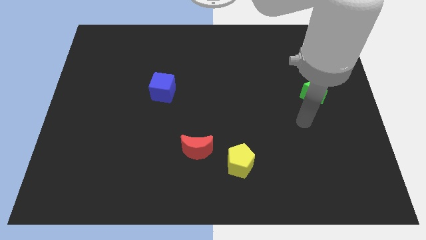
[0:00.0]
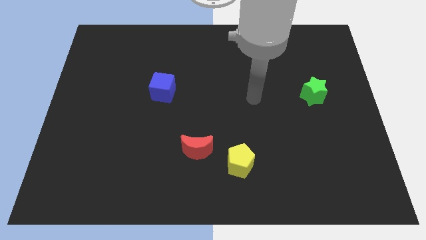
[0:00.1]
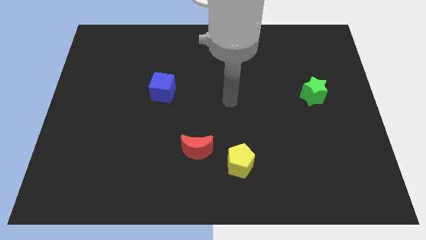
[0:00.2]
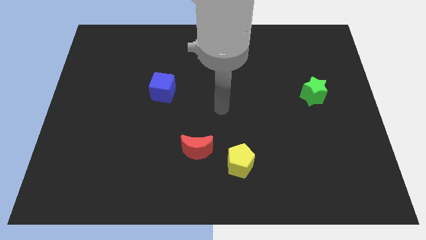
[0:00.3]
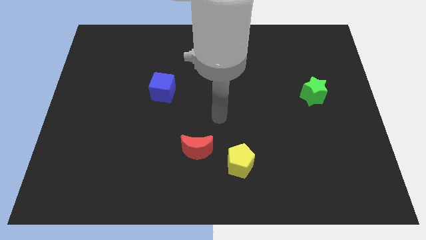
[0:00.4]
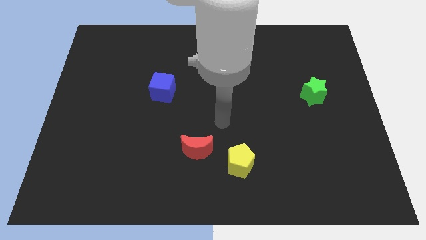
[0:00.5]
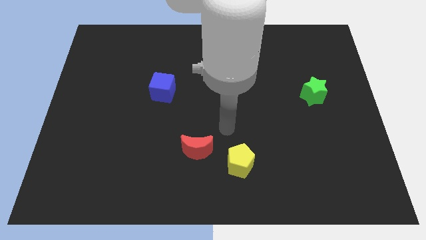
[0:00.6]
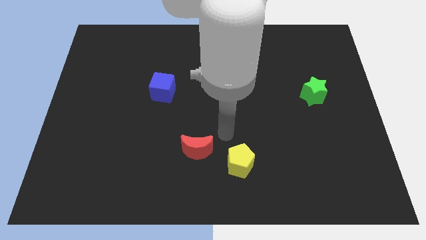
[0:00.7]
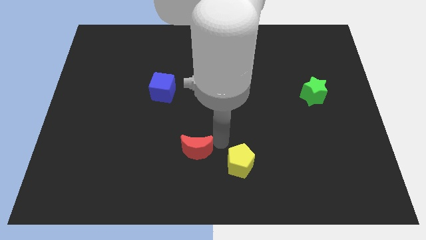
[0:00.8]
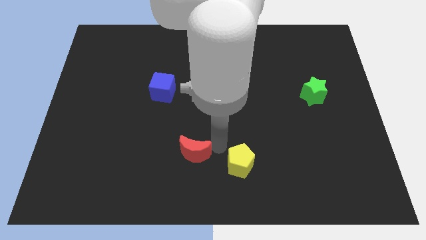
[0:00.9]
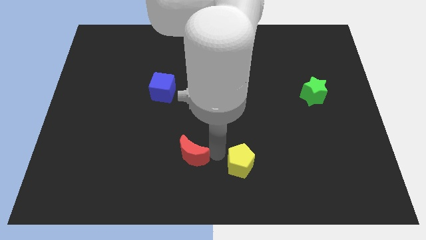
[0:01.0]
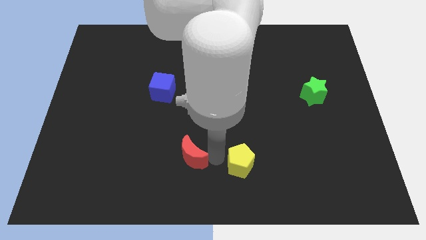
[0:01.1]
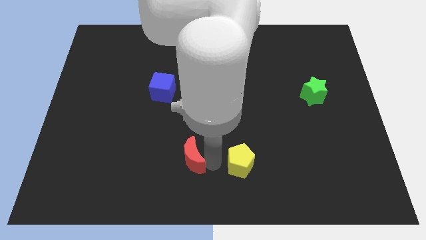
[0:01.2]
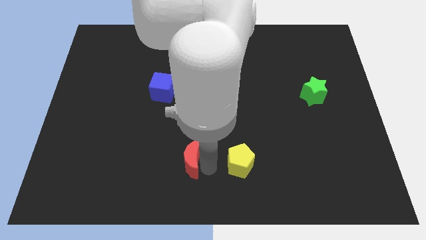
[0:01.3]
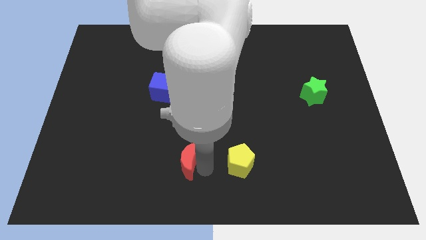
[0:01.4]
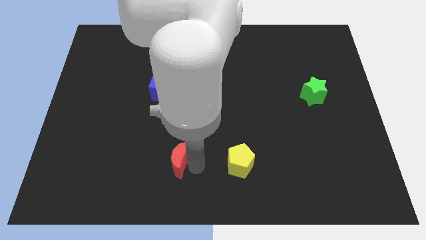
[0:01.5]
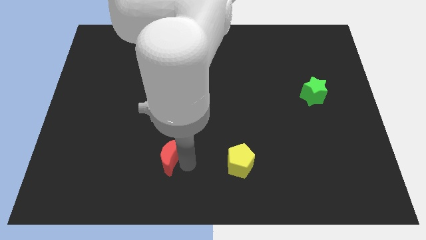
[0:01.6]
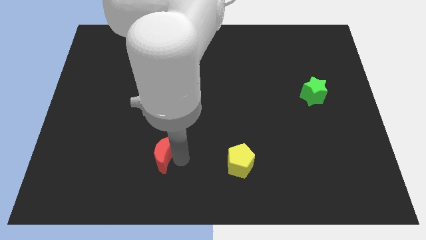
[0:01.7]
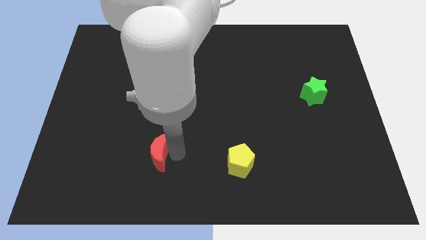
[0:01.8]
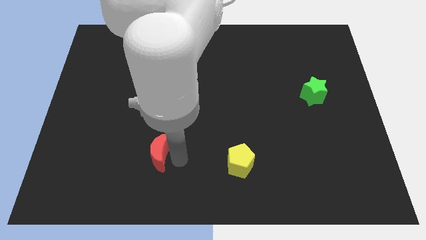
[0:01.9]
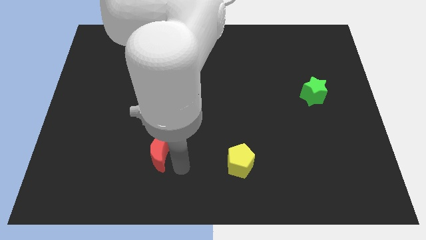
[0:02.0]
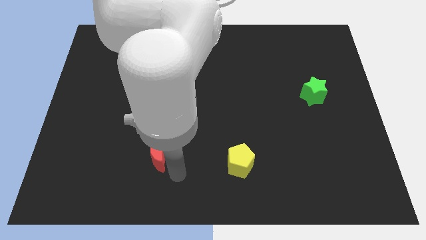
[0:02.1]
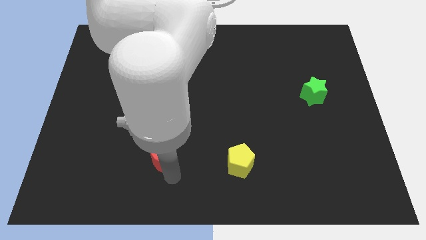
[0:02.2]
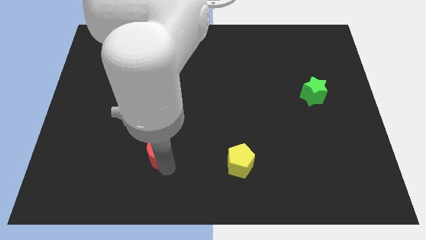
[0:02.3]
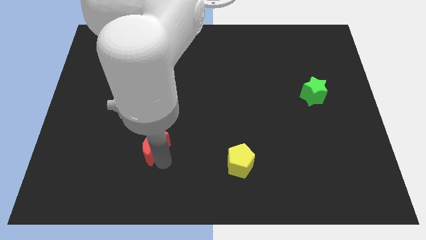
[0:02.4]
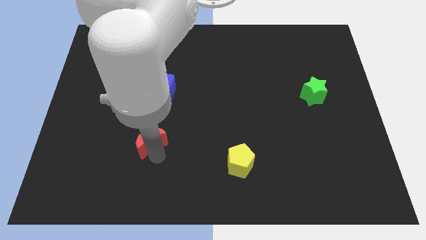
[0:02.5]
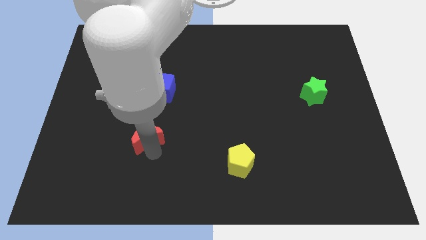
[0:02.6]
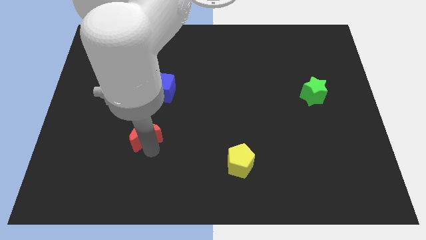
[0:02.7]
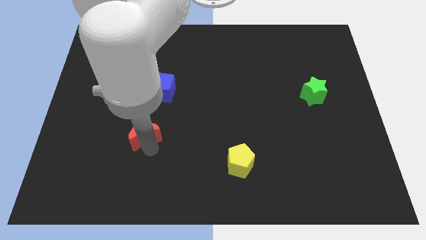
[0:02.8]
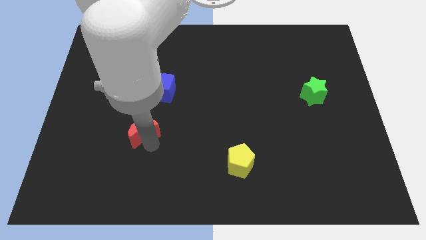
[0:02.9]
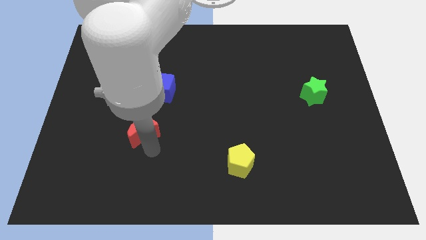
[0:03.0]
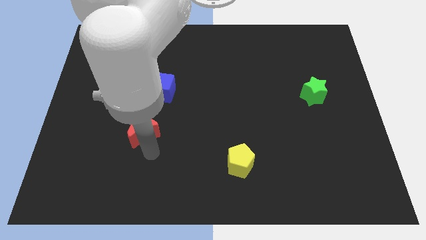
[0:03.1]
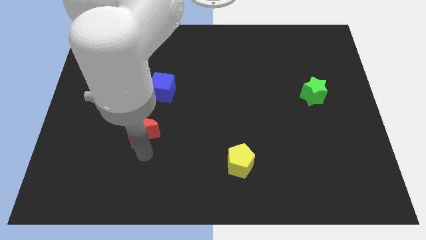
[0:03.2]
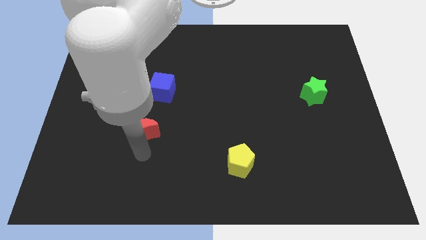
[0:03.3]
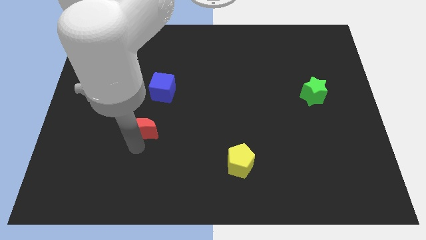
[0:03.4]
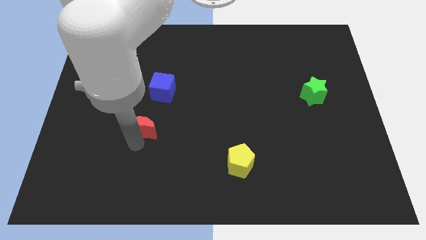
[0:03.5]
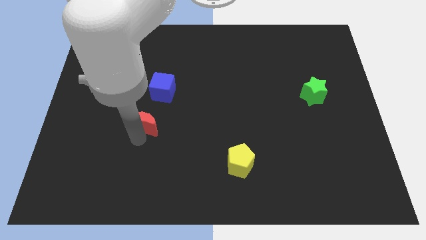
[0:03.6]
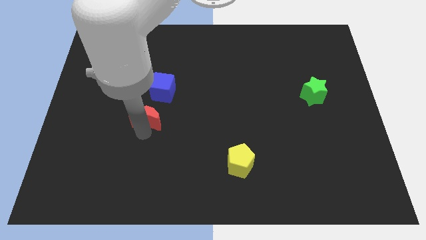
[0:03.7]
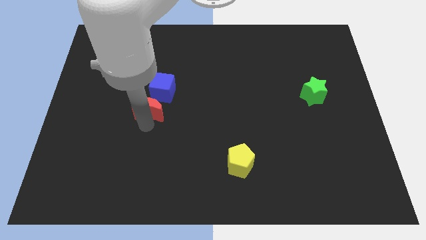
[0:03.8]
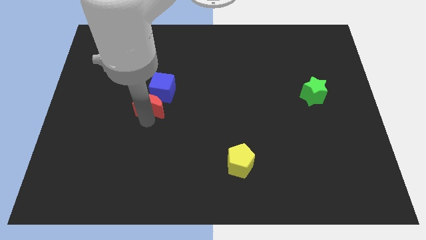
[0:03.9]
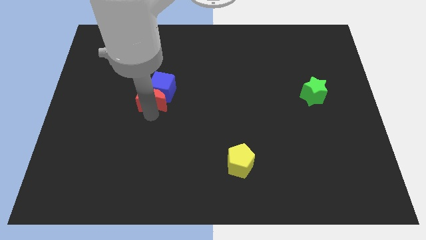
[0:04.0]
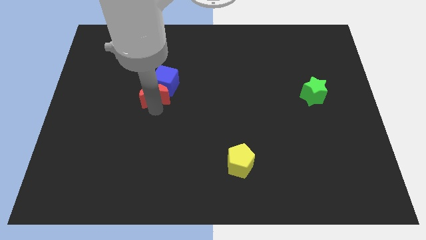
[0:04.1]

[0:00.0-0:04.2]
put the moon to the cube

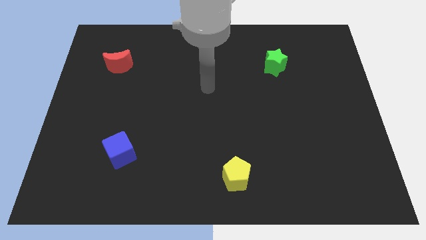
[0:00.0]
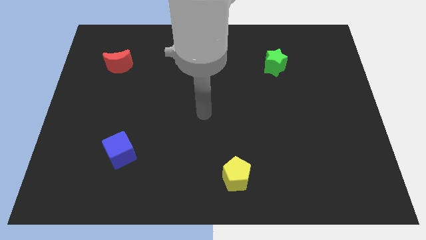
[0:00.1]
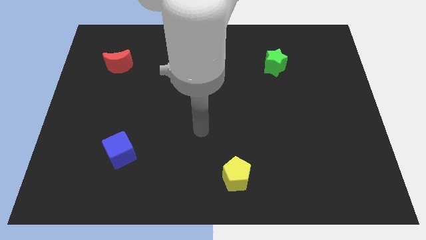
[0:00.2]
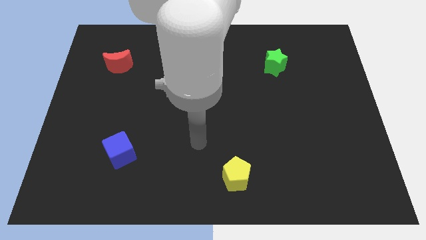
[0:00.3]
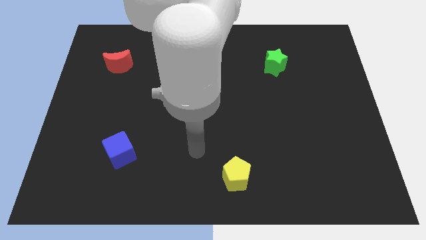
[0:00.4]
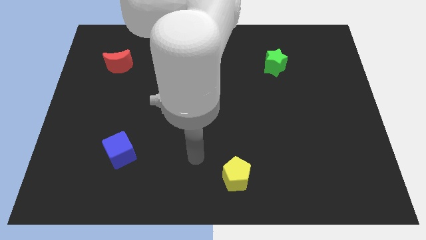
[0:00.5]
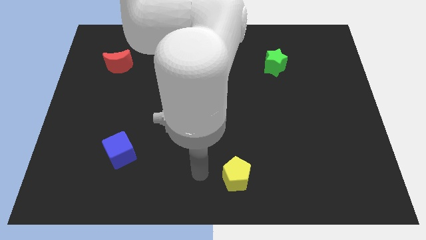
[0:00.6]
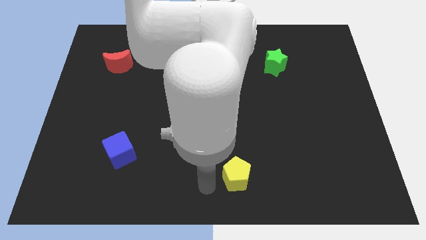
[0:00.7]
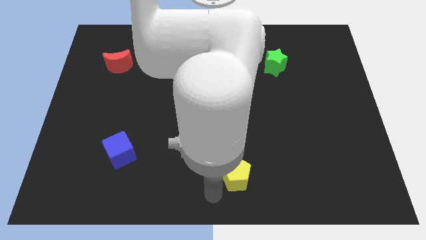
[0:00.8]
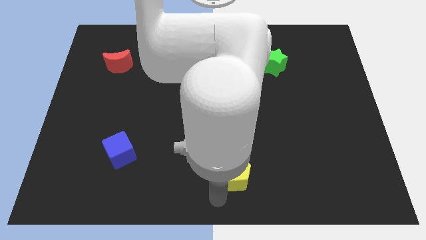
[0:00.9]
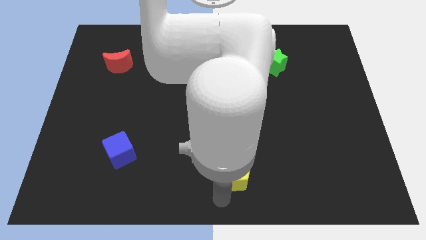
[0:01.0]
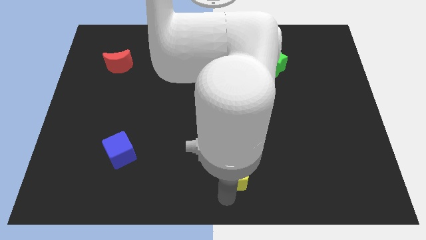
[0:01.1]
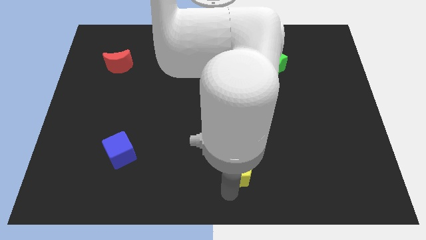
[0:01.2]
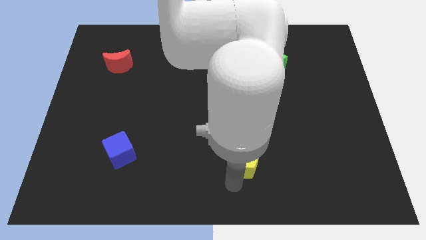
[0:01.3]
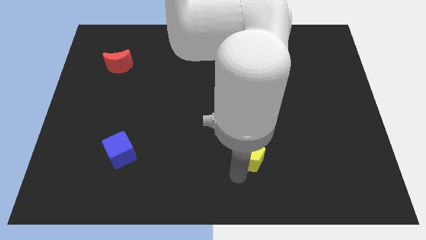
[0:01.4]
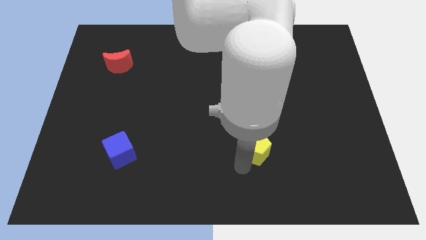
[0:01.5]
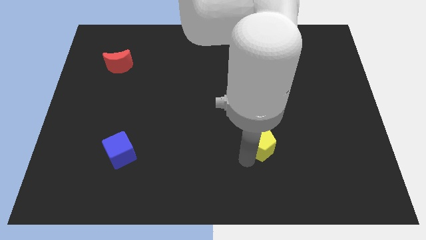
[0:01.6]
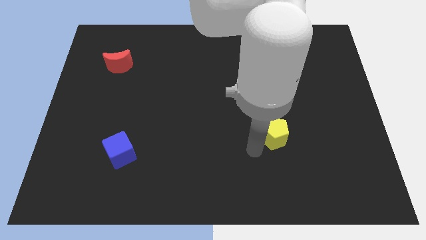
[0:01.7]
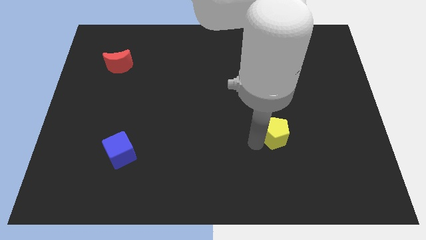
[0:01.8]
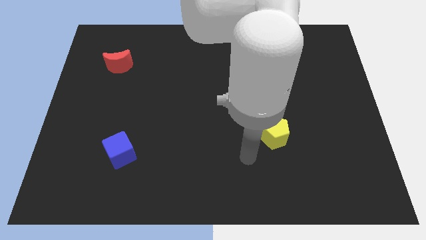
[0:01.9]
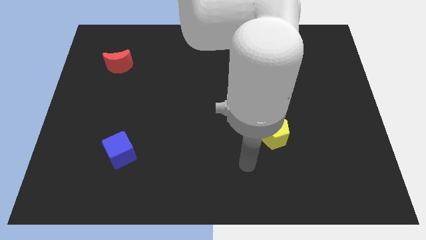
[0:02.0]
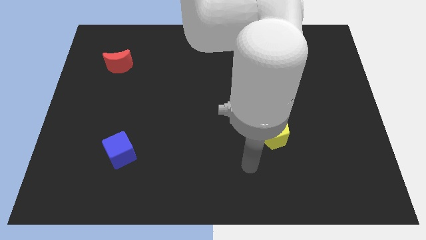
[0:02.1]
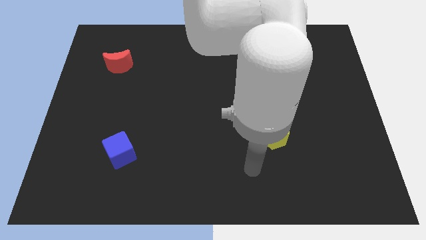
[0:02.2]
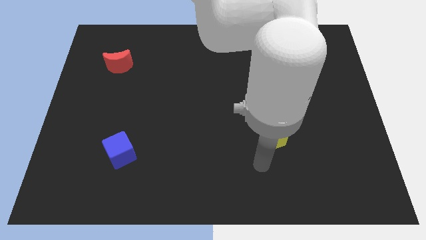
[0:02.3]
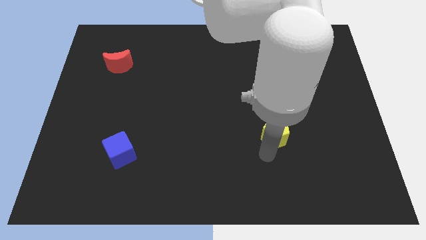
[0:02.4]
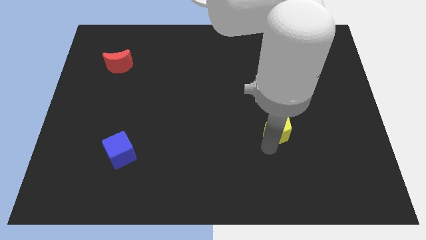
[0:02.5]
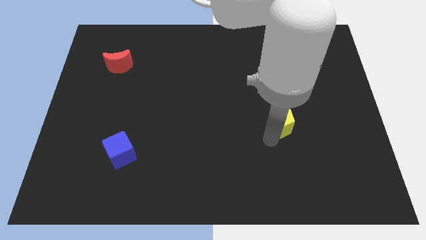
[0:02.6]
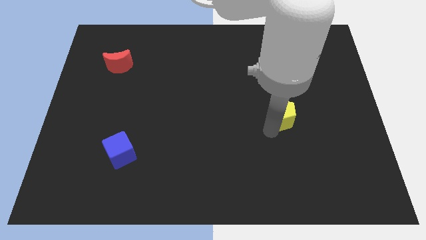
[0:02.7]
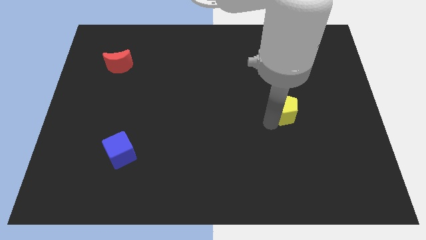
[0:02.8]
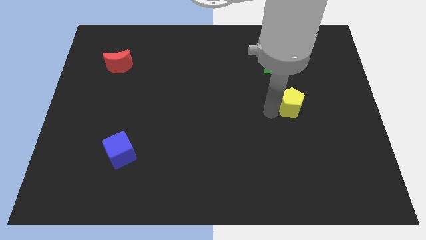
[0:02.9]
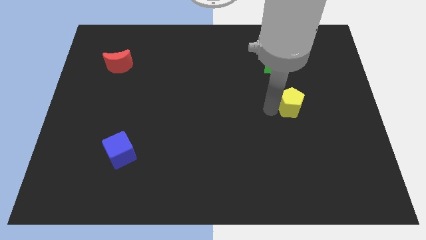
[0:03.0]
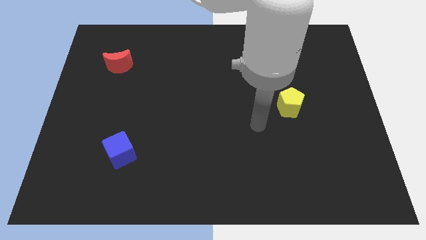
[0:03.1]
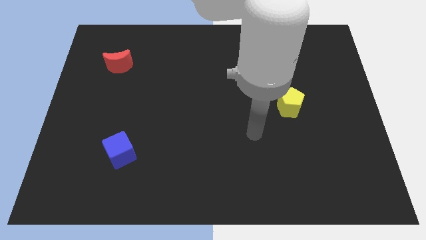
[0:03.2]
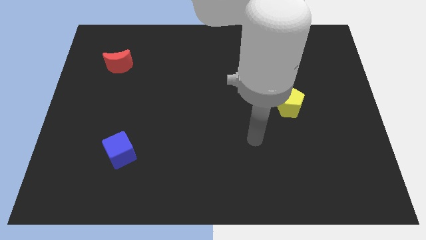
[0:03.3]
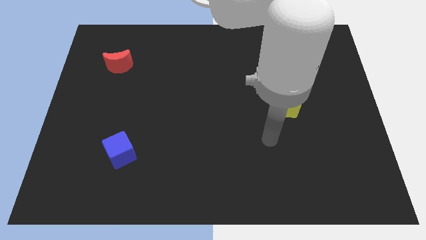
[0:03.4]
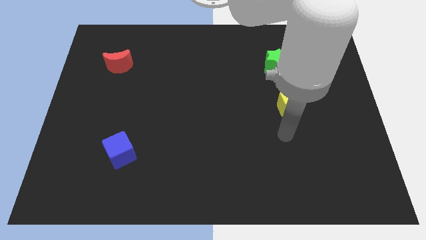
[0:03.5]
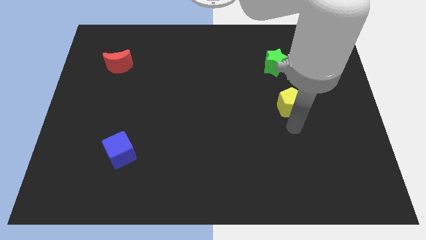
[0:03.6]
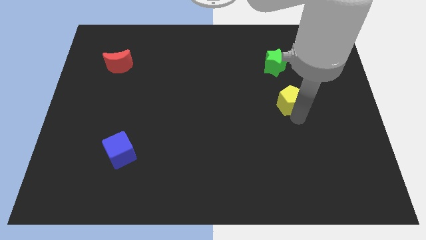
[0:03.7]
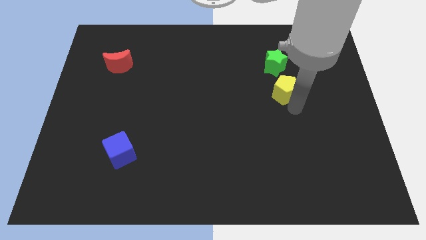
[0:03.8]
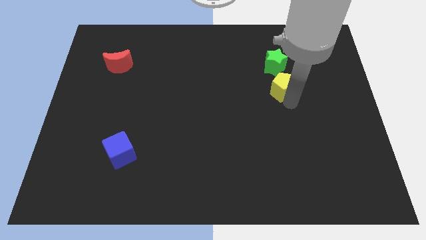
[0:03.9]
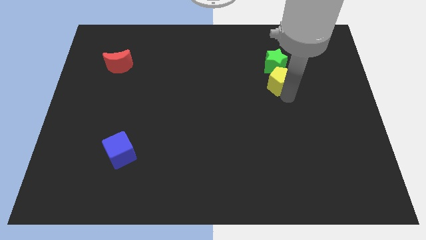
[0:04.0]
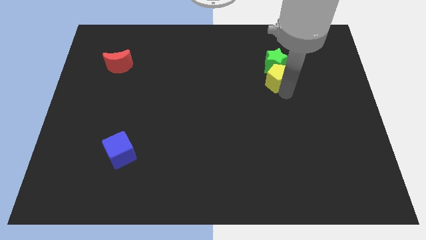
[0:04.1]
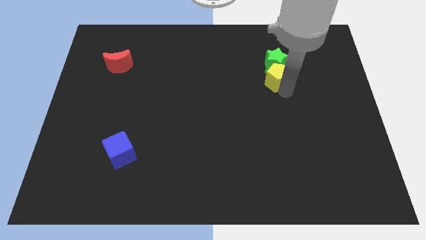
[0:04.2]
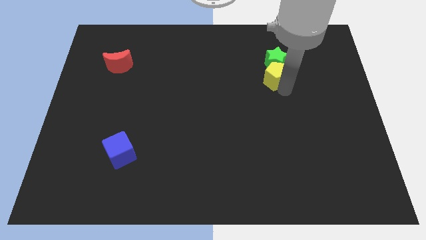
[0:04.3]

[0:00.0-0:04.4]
push the pentagon towards the star
